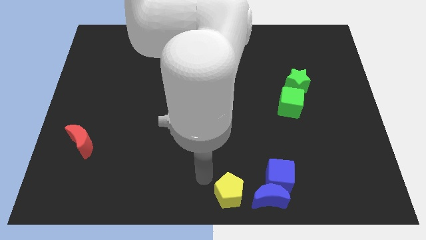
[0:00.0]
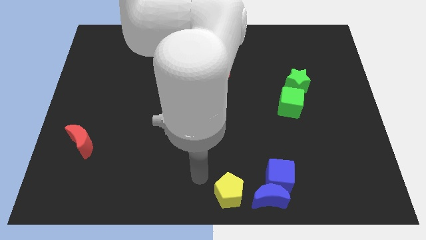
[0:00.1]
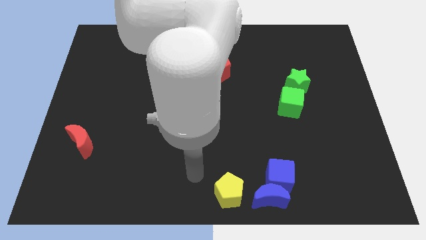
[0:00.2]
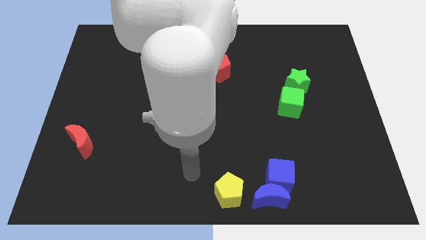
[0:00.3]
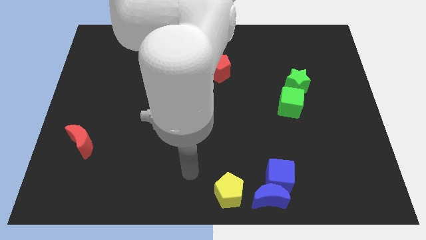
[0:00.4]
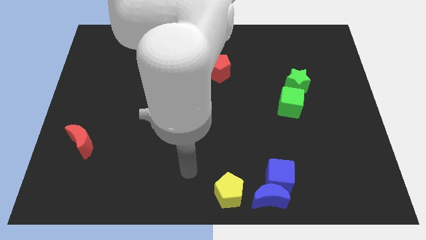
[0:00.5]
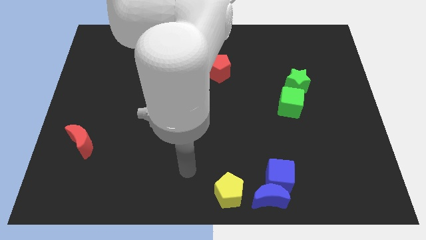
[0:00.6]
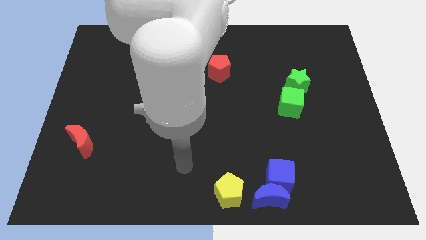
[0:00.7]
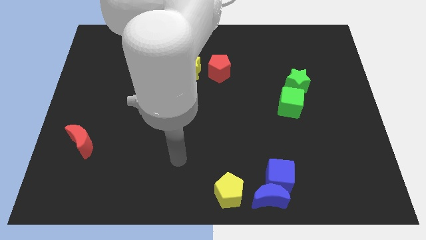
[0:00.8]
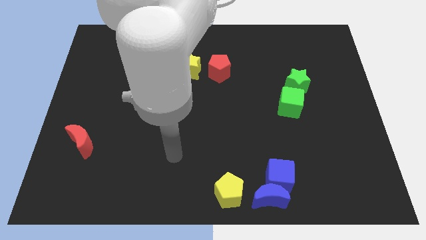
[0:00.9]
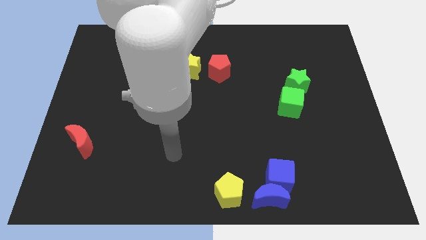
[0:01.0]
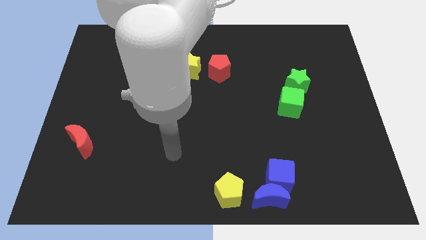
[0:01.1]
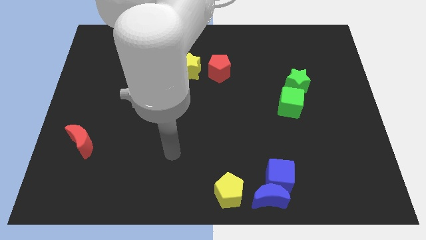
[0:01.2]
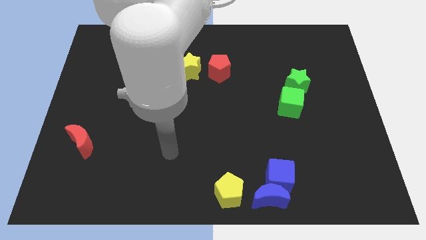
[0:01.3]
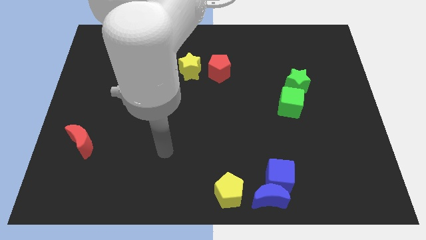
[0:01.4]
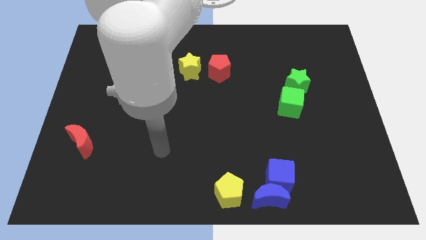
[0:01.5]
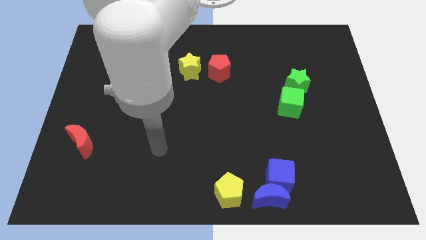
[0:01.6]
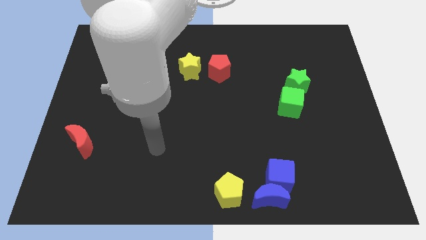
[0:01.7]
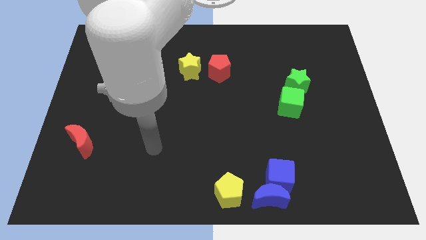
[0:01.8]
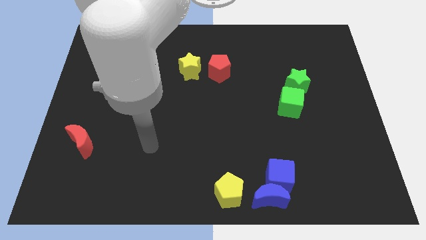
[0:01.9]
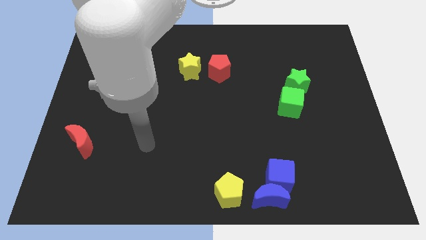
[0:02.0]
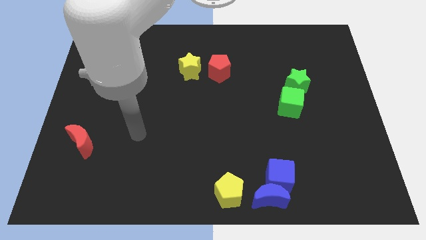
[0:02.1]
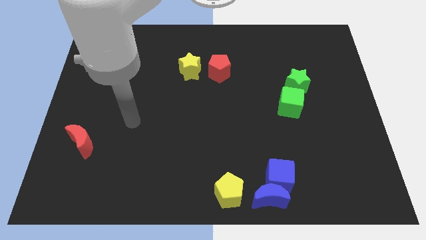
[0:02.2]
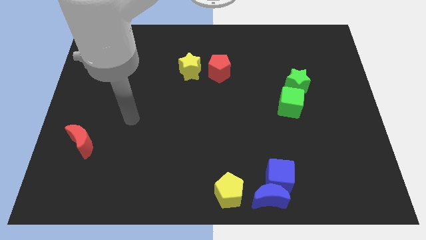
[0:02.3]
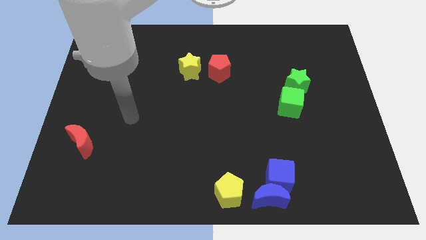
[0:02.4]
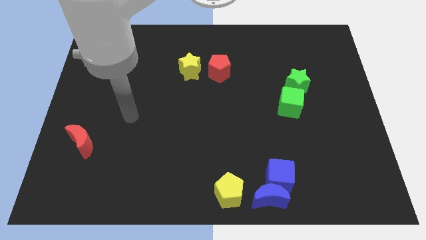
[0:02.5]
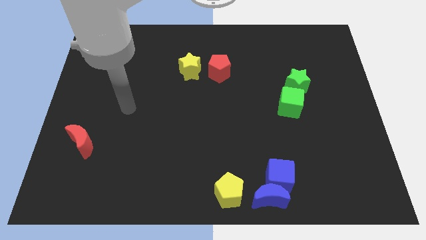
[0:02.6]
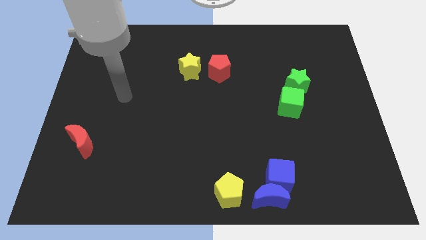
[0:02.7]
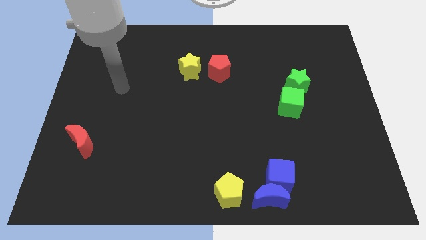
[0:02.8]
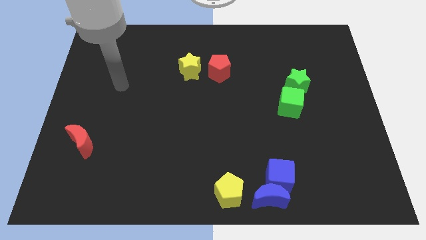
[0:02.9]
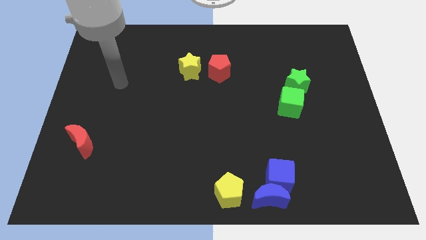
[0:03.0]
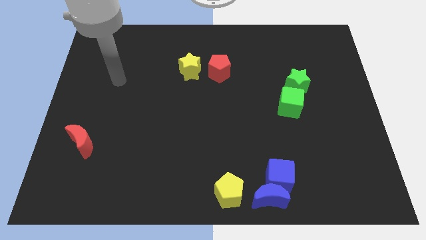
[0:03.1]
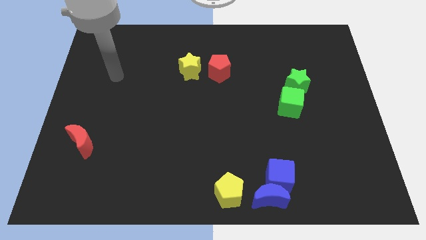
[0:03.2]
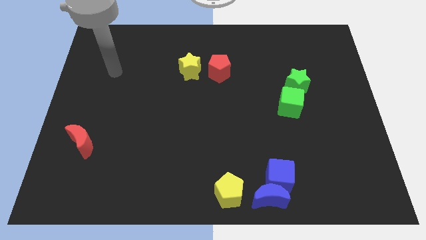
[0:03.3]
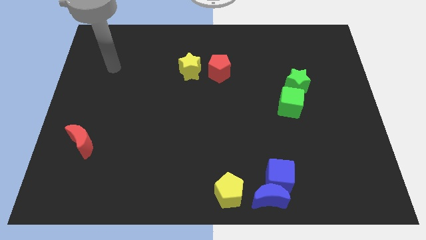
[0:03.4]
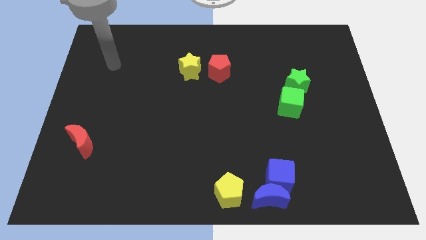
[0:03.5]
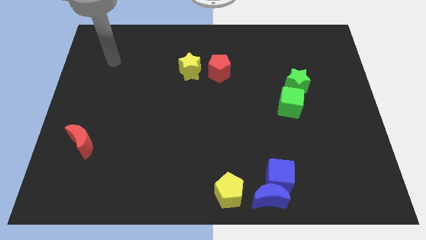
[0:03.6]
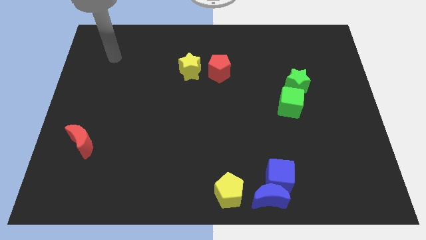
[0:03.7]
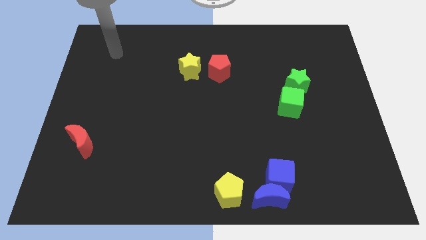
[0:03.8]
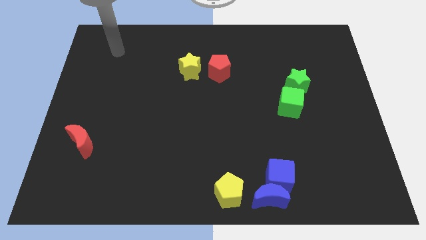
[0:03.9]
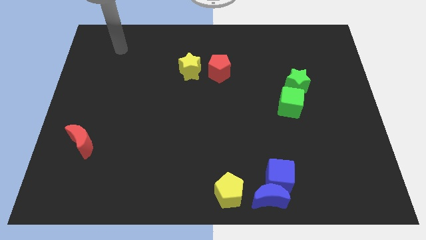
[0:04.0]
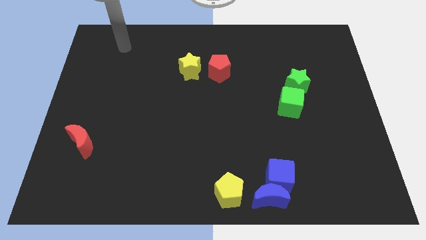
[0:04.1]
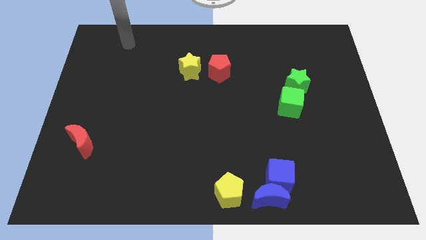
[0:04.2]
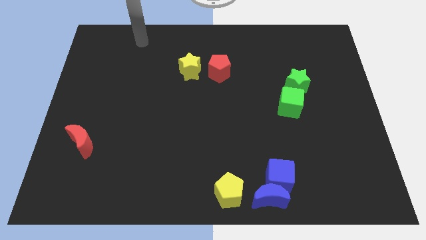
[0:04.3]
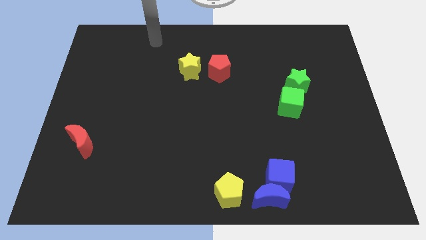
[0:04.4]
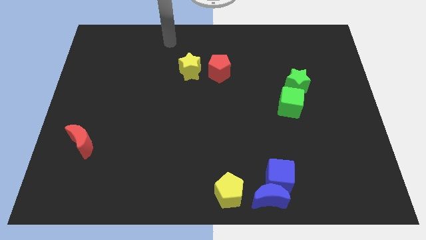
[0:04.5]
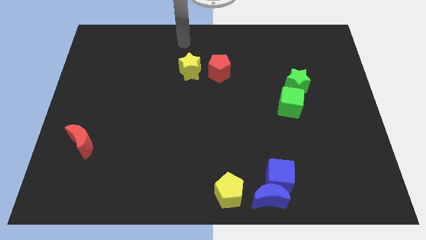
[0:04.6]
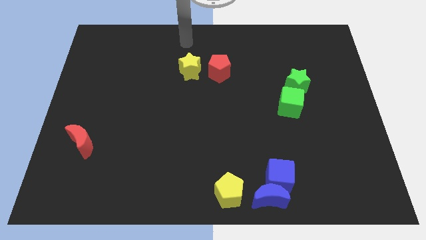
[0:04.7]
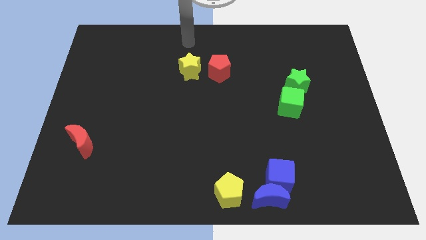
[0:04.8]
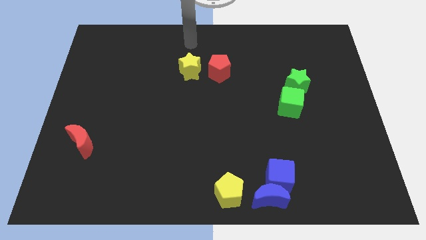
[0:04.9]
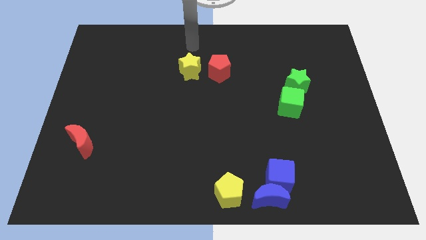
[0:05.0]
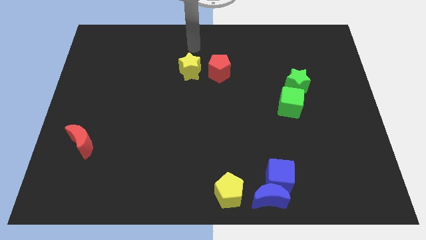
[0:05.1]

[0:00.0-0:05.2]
go to the top side of the yellow star

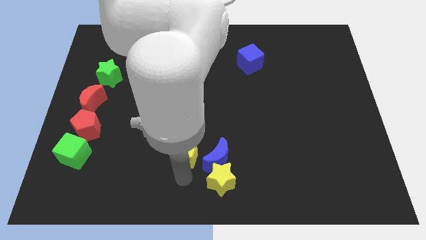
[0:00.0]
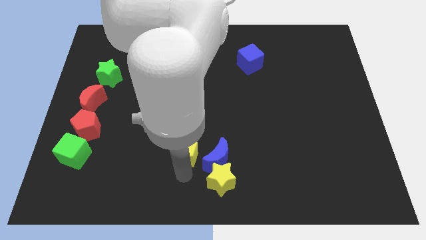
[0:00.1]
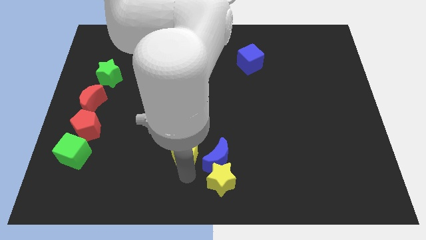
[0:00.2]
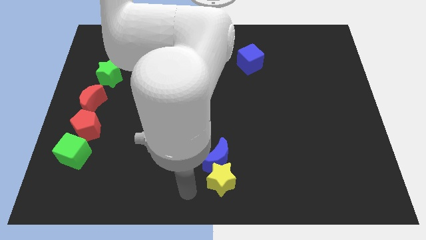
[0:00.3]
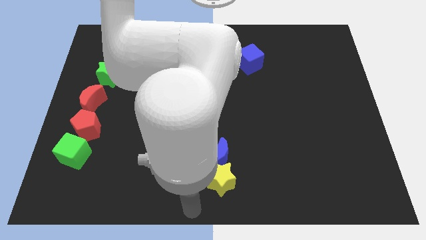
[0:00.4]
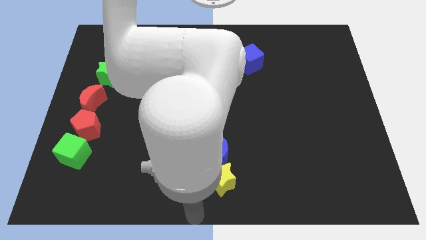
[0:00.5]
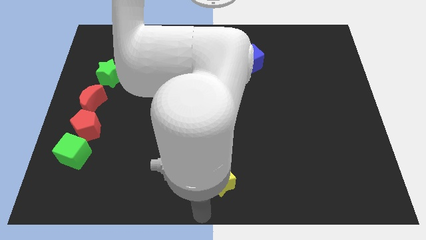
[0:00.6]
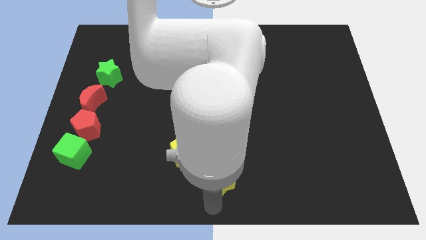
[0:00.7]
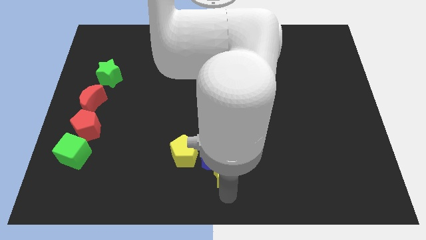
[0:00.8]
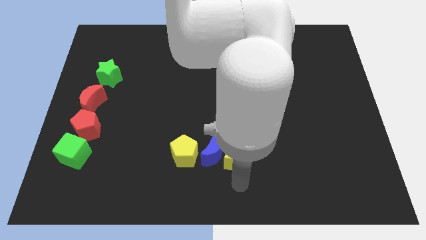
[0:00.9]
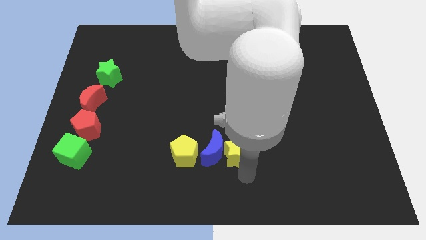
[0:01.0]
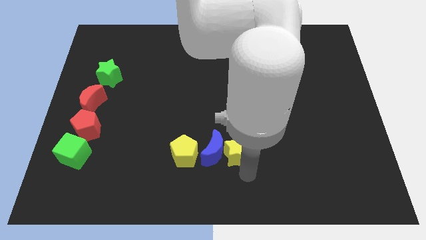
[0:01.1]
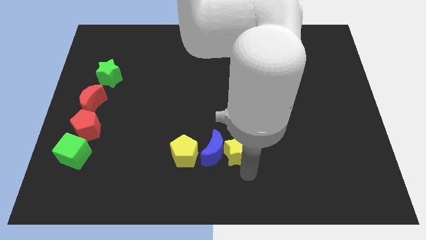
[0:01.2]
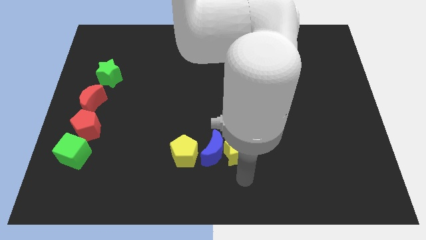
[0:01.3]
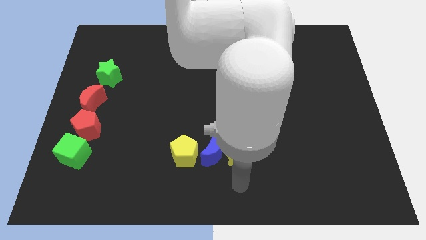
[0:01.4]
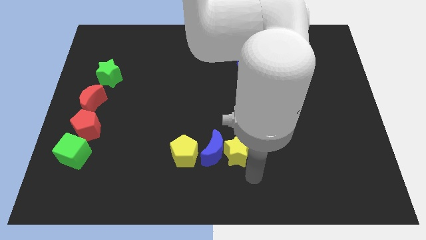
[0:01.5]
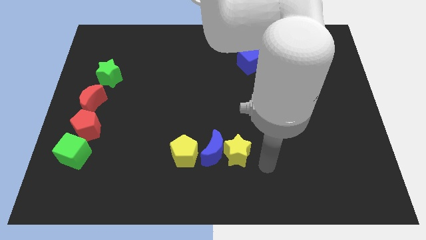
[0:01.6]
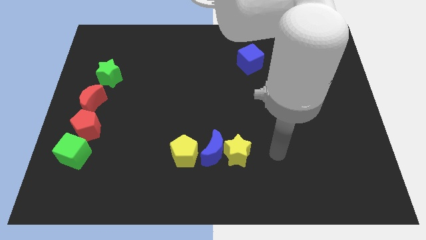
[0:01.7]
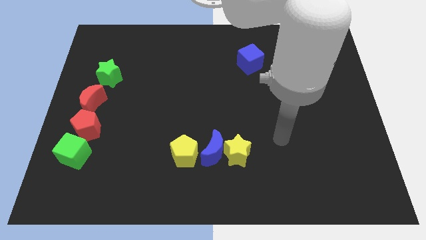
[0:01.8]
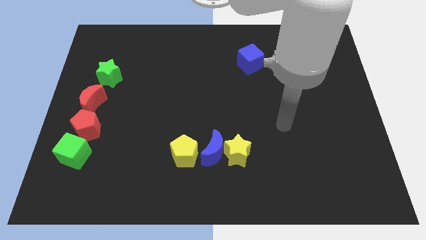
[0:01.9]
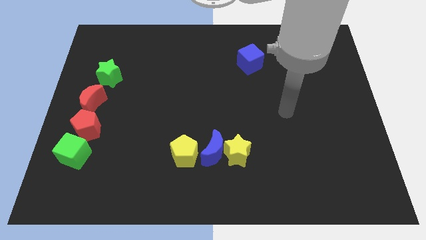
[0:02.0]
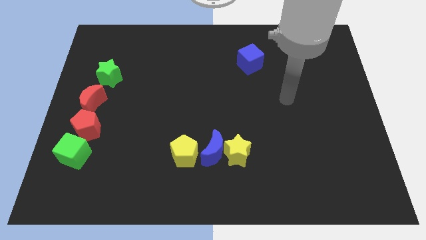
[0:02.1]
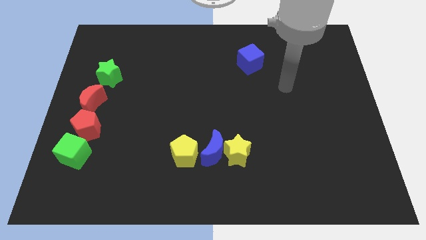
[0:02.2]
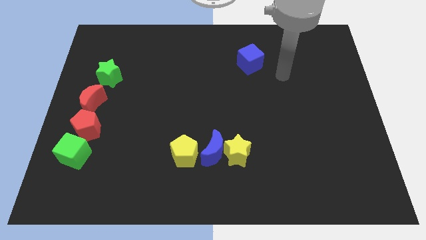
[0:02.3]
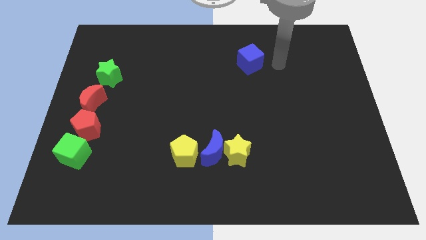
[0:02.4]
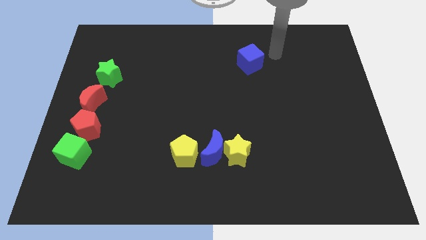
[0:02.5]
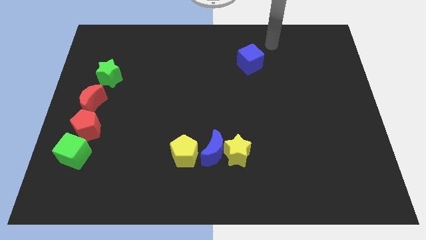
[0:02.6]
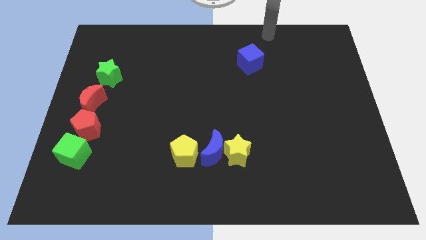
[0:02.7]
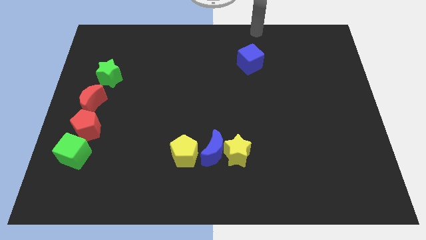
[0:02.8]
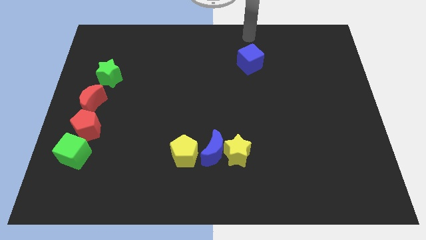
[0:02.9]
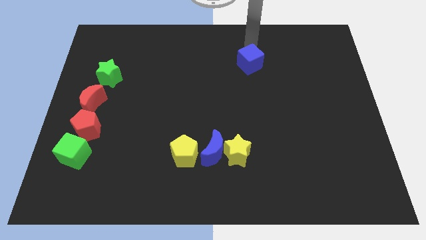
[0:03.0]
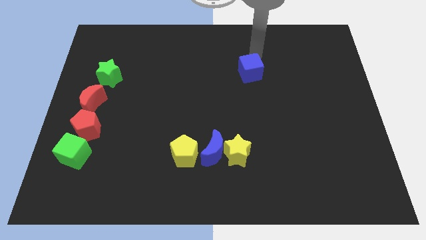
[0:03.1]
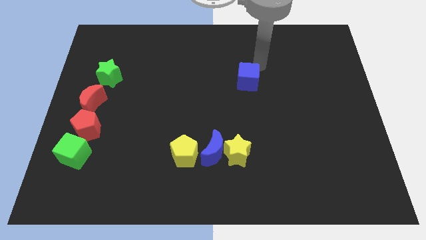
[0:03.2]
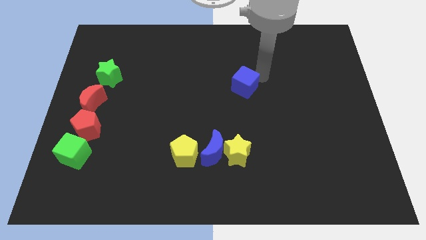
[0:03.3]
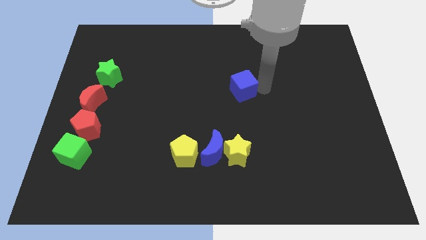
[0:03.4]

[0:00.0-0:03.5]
move blue cube slightly down

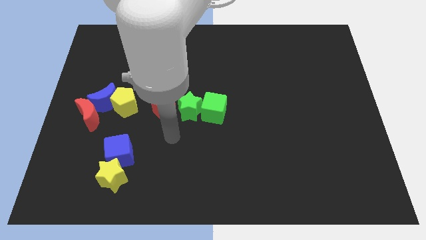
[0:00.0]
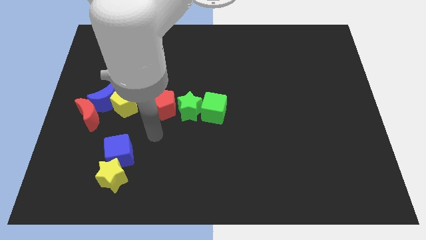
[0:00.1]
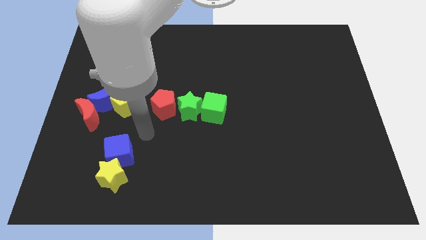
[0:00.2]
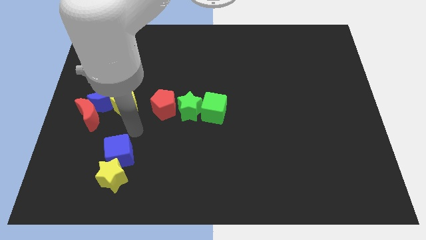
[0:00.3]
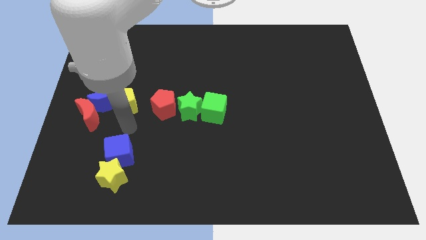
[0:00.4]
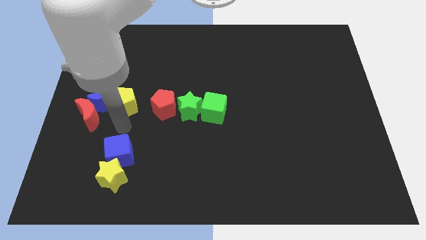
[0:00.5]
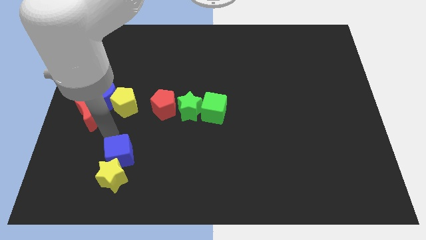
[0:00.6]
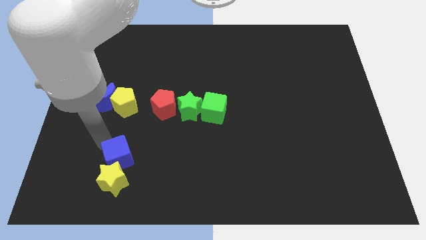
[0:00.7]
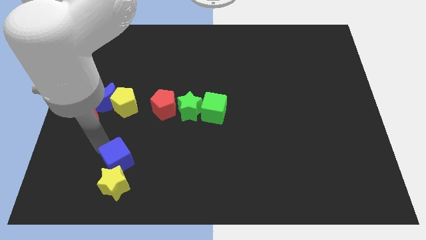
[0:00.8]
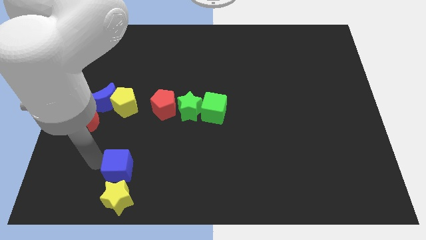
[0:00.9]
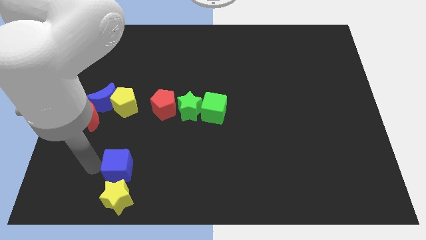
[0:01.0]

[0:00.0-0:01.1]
push the yellow star with a blue cube towards down
